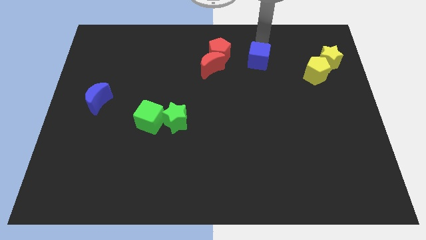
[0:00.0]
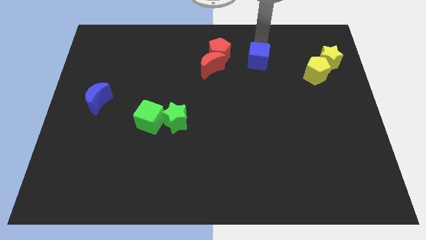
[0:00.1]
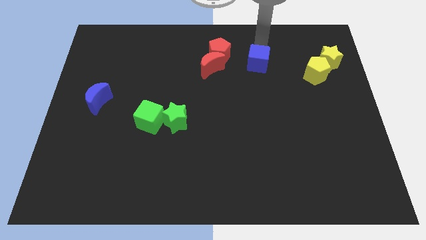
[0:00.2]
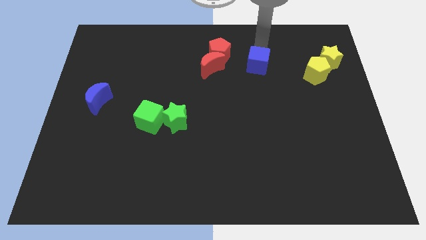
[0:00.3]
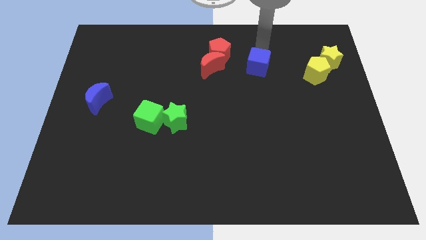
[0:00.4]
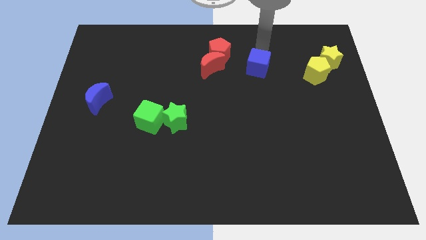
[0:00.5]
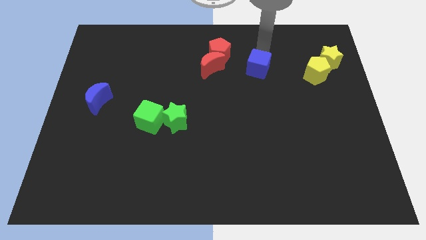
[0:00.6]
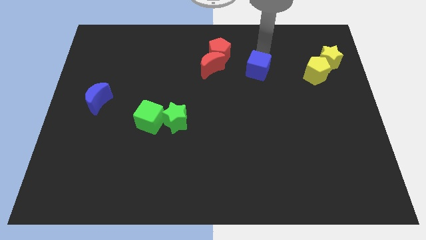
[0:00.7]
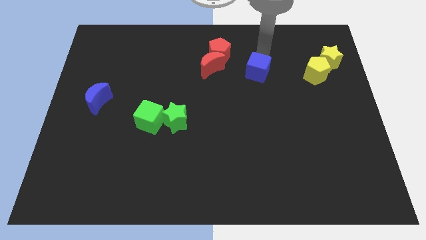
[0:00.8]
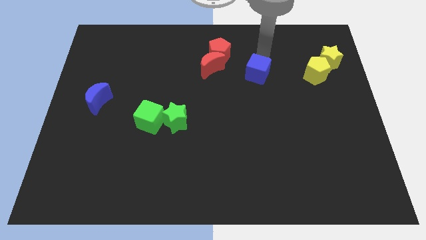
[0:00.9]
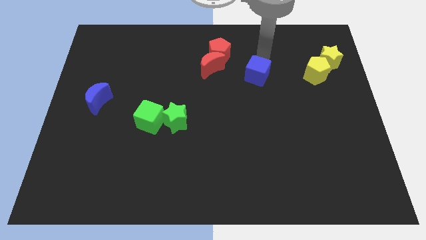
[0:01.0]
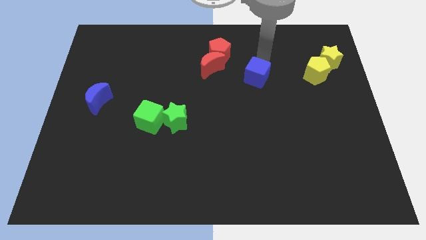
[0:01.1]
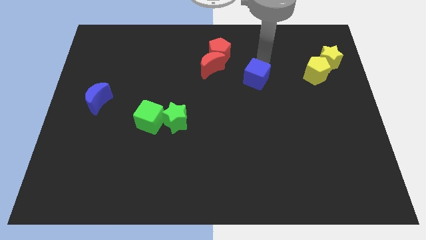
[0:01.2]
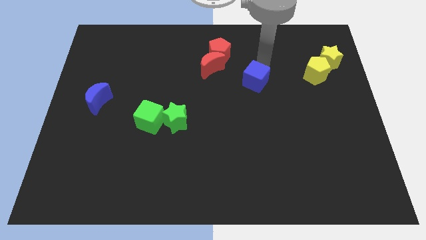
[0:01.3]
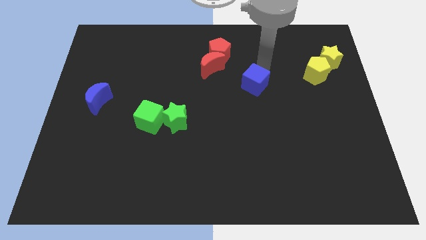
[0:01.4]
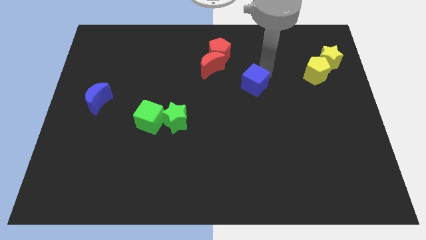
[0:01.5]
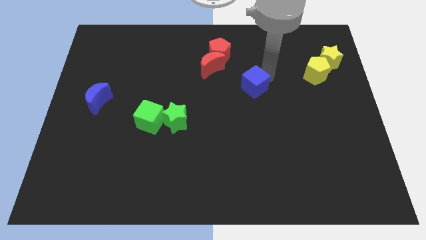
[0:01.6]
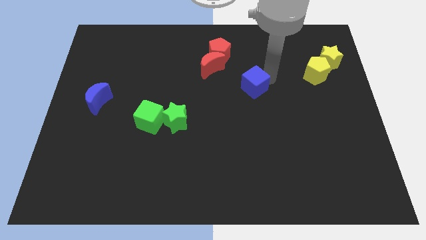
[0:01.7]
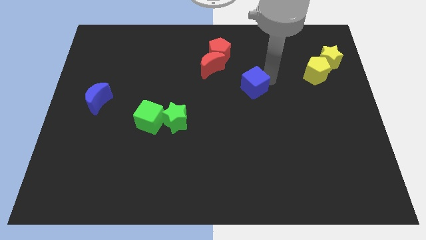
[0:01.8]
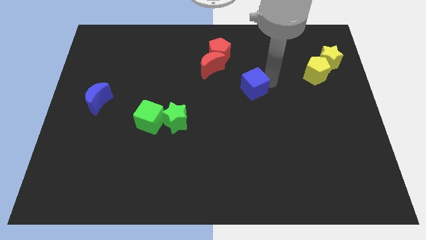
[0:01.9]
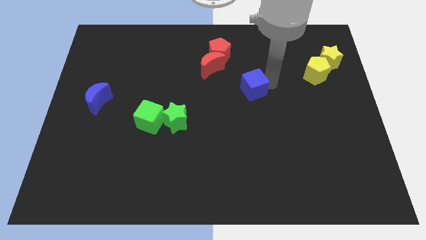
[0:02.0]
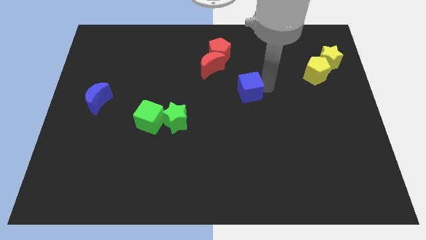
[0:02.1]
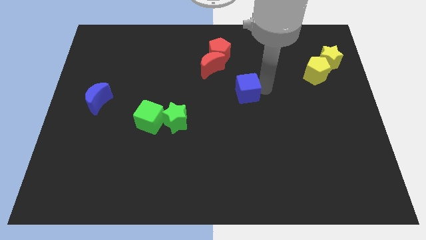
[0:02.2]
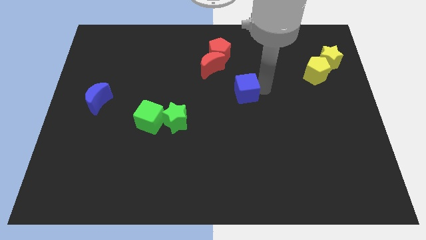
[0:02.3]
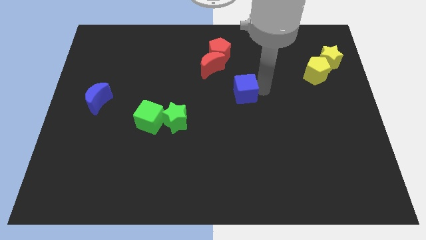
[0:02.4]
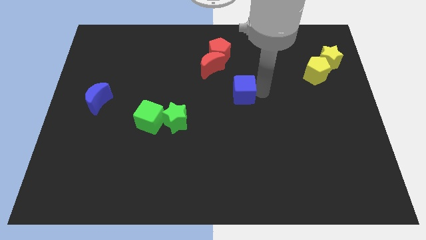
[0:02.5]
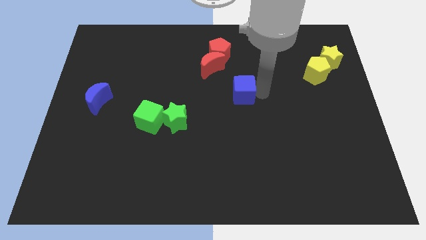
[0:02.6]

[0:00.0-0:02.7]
push the blue cube towards the center of the board

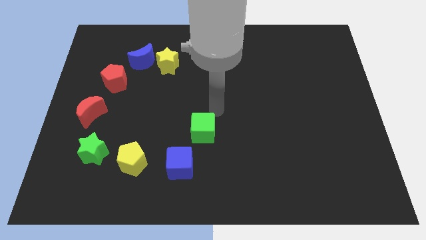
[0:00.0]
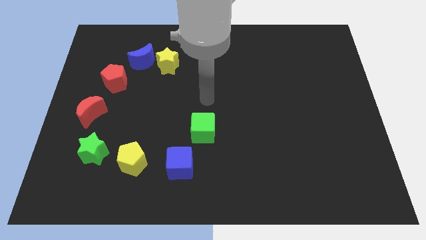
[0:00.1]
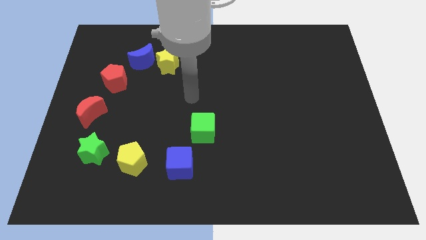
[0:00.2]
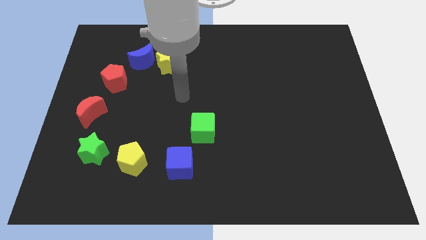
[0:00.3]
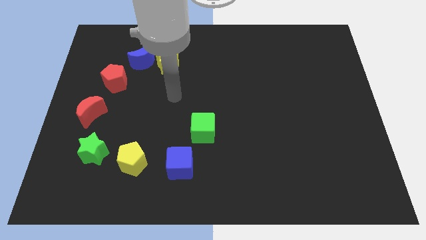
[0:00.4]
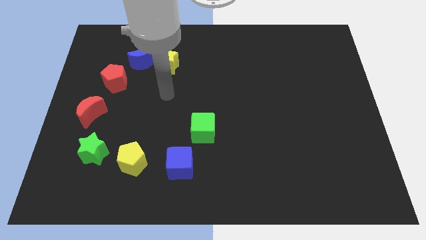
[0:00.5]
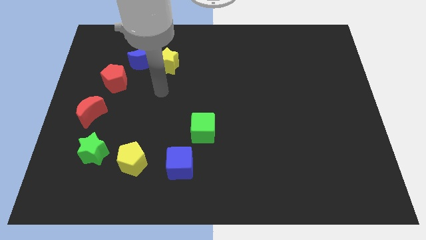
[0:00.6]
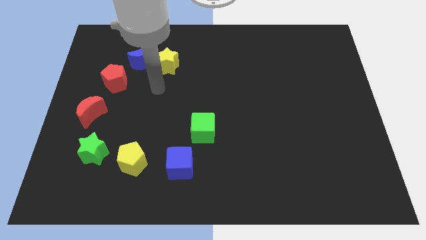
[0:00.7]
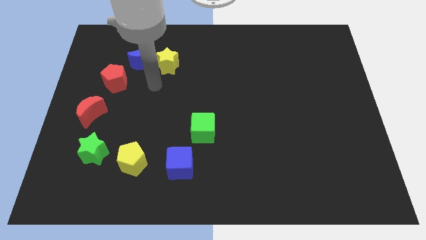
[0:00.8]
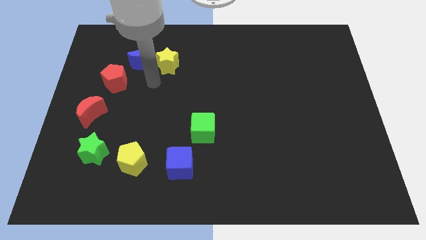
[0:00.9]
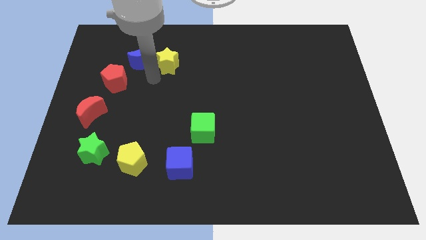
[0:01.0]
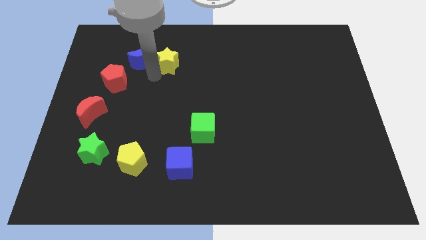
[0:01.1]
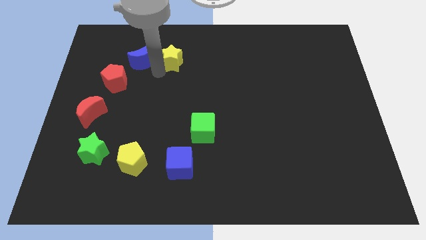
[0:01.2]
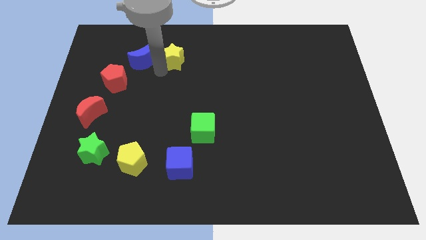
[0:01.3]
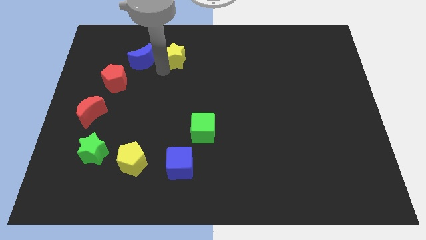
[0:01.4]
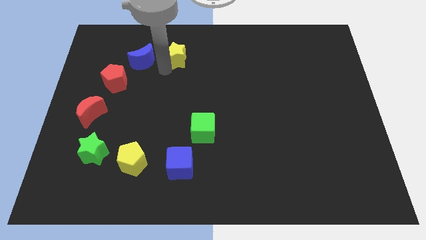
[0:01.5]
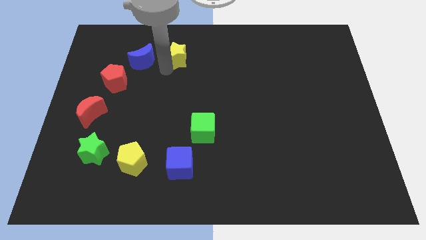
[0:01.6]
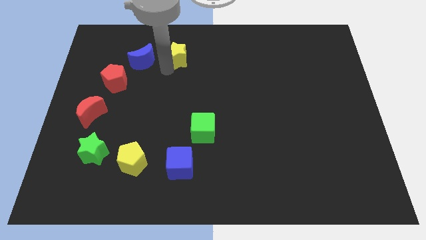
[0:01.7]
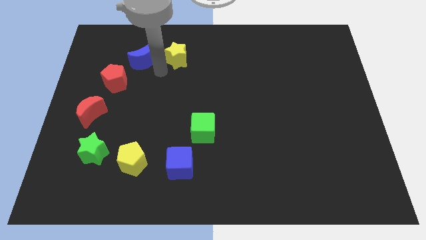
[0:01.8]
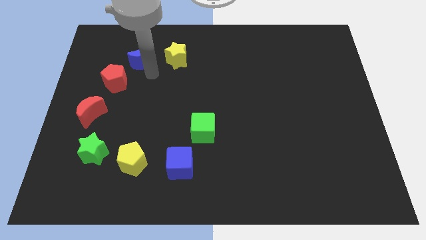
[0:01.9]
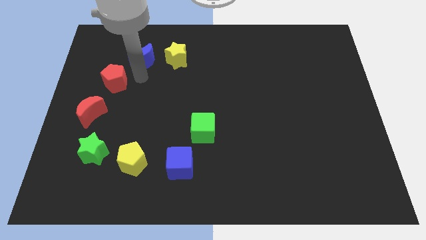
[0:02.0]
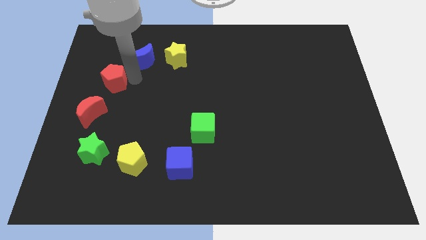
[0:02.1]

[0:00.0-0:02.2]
push the yellow star towards the top side of the board

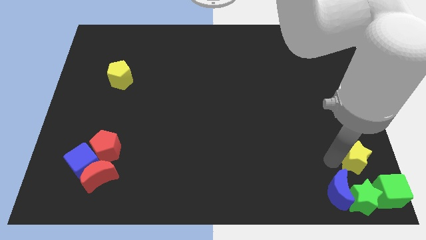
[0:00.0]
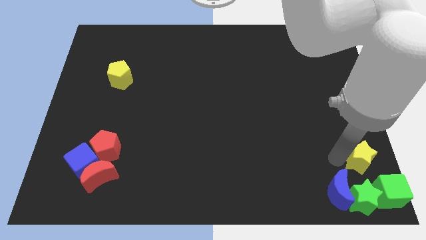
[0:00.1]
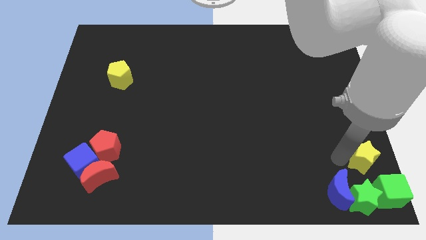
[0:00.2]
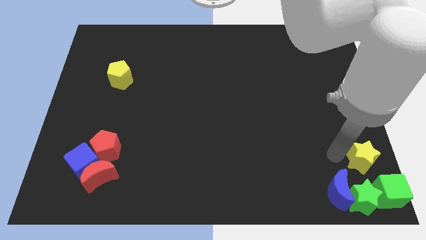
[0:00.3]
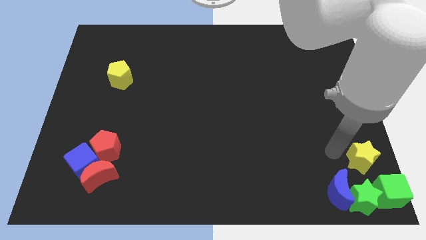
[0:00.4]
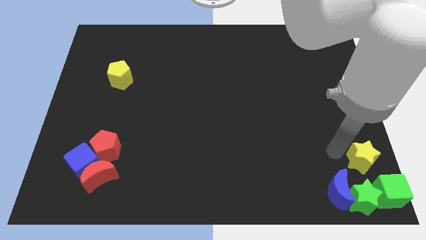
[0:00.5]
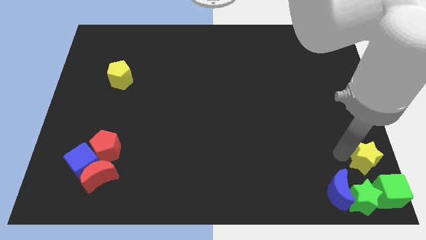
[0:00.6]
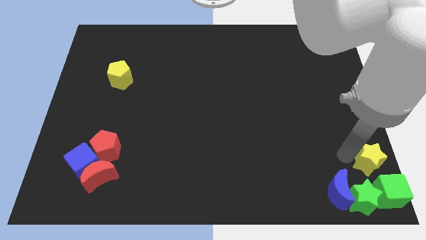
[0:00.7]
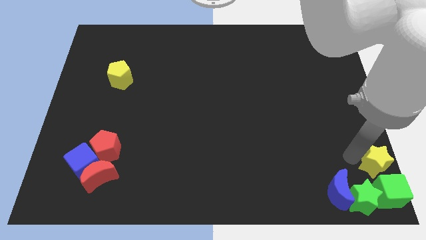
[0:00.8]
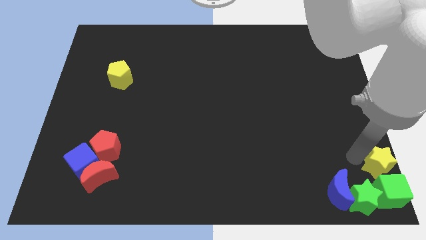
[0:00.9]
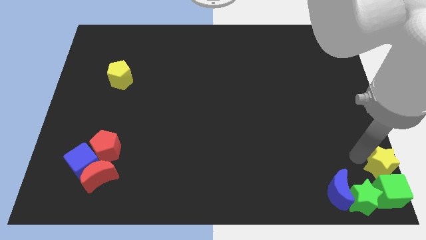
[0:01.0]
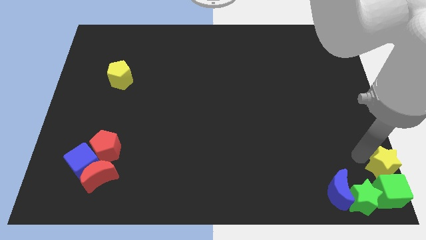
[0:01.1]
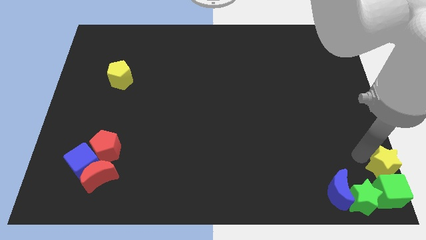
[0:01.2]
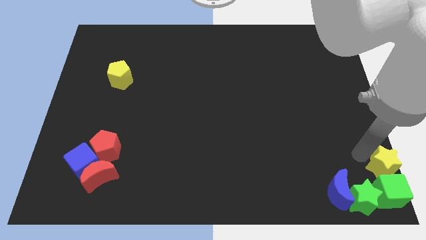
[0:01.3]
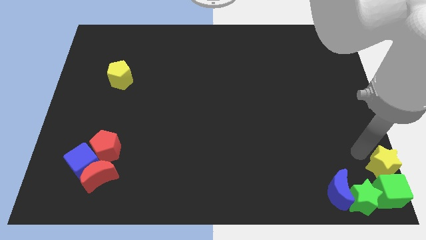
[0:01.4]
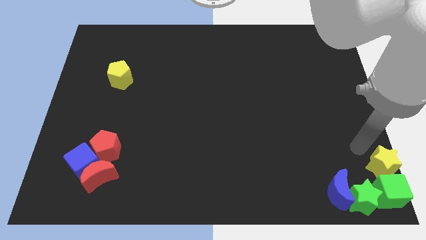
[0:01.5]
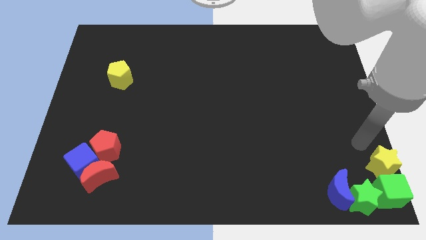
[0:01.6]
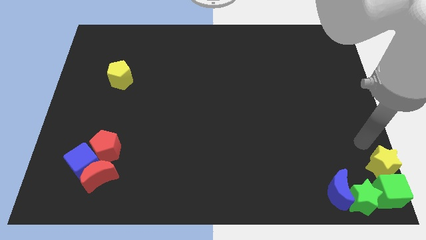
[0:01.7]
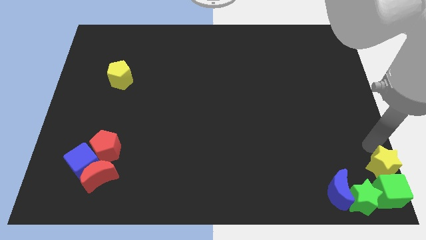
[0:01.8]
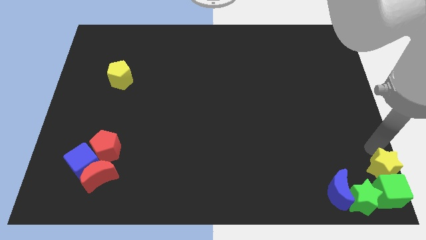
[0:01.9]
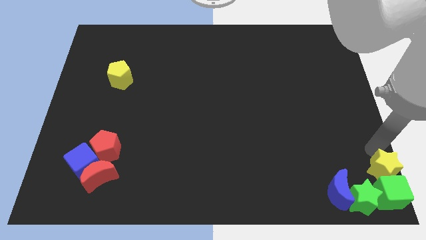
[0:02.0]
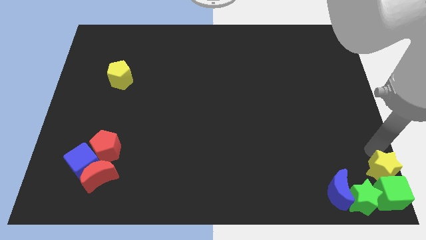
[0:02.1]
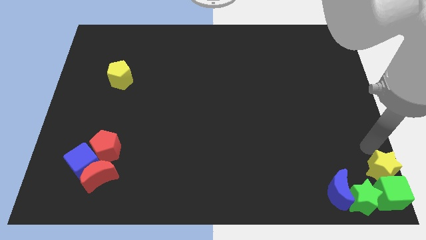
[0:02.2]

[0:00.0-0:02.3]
move the yellow star to the top of the green cube

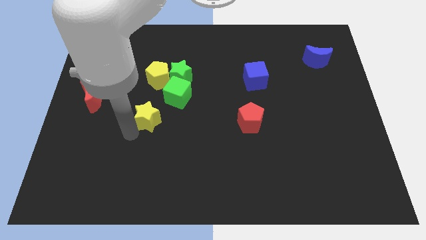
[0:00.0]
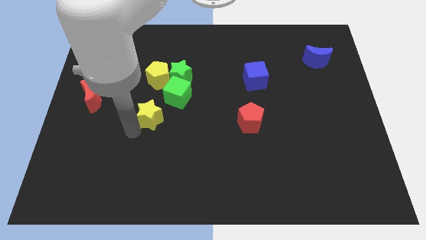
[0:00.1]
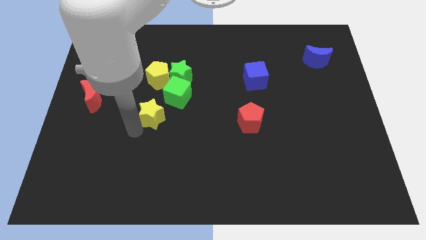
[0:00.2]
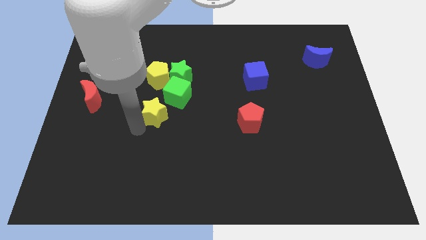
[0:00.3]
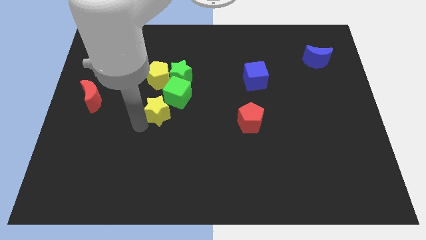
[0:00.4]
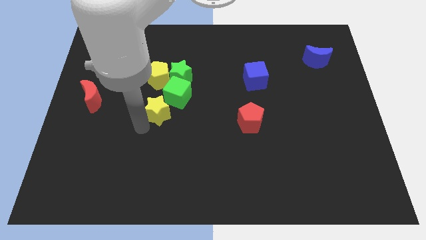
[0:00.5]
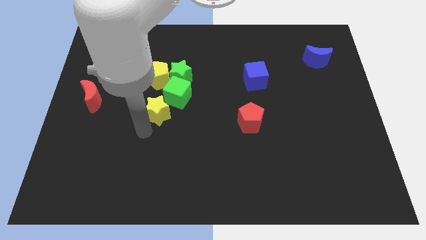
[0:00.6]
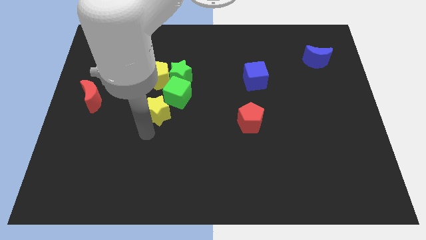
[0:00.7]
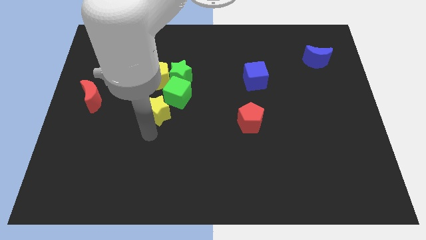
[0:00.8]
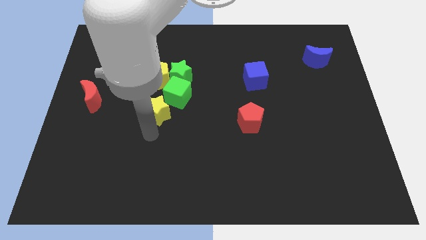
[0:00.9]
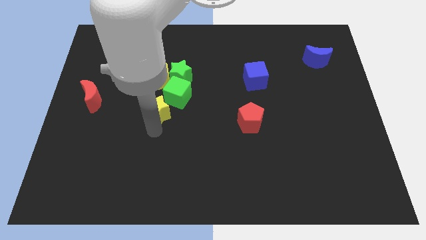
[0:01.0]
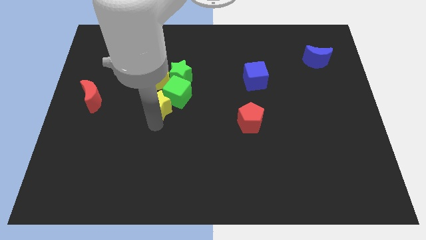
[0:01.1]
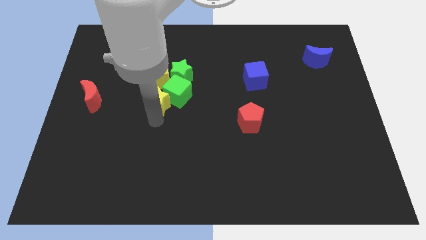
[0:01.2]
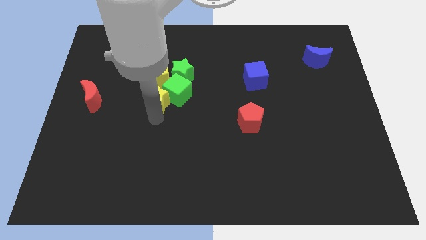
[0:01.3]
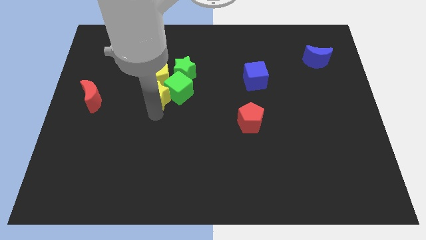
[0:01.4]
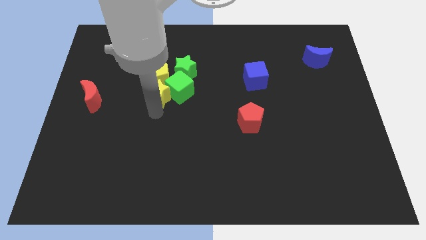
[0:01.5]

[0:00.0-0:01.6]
move the yellow star into the group of object
